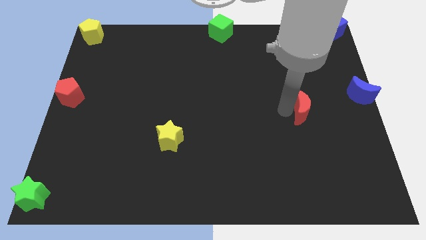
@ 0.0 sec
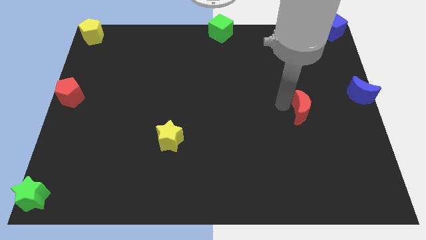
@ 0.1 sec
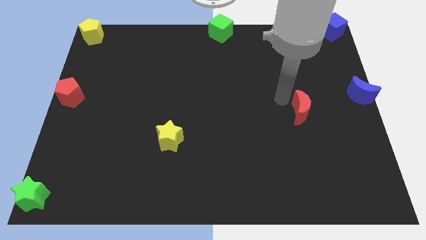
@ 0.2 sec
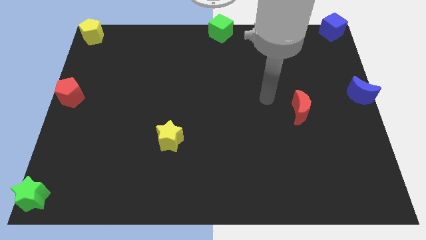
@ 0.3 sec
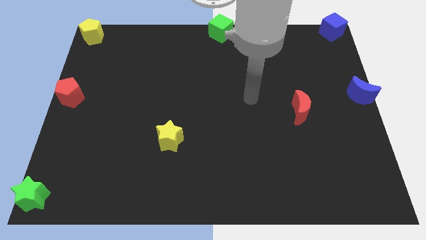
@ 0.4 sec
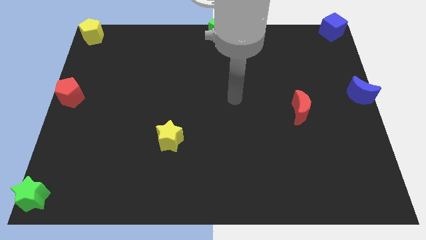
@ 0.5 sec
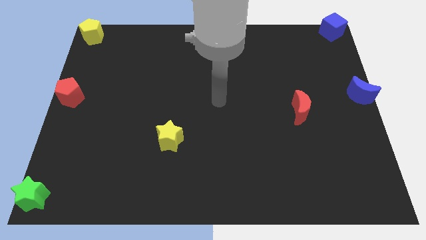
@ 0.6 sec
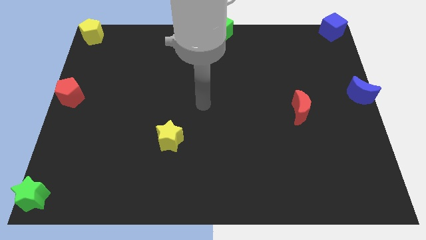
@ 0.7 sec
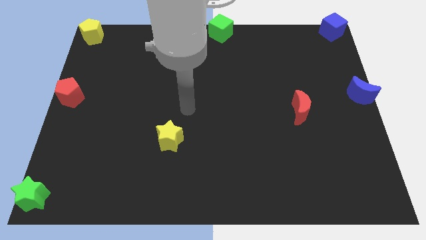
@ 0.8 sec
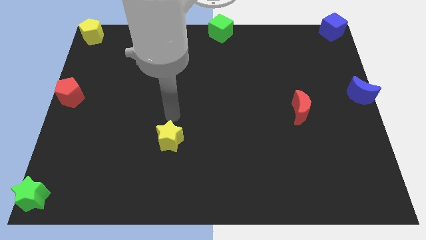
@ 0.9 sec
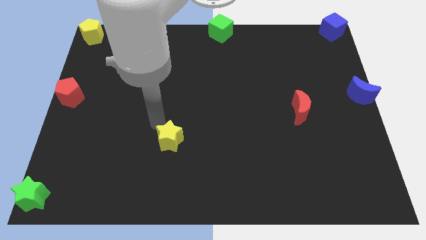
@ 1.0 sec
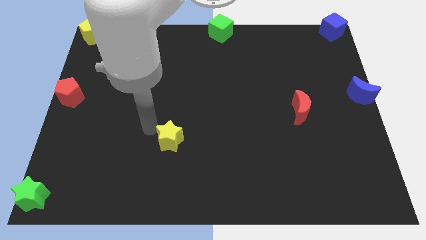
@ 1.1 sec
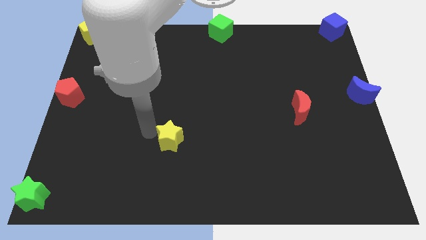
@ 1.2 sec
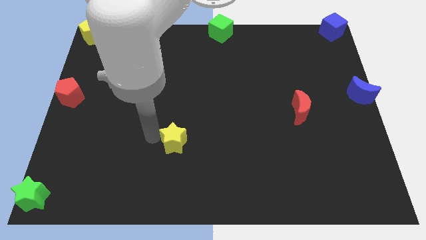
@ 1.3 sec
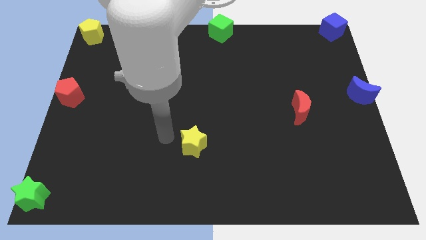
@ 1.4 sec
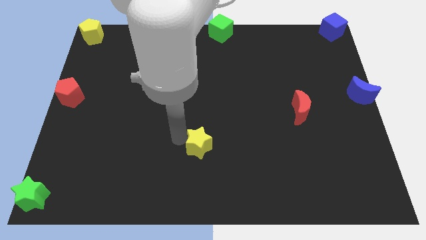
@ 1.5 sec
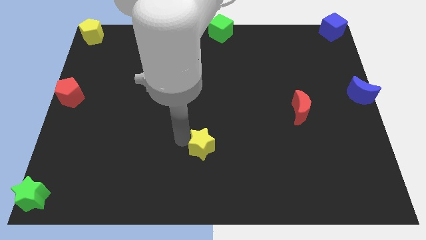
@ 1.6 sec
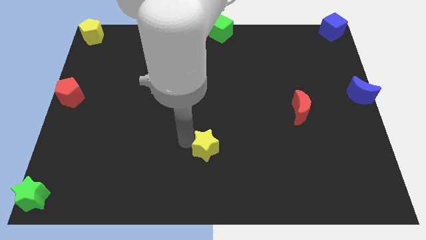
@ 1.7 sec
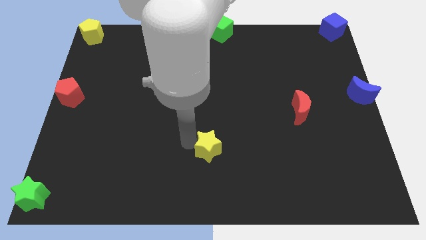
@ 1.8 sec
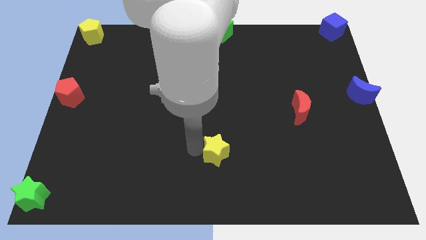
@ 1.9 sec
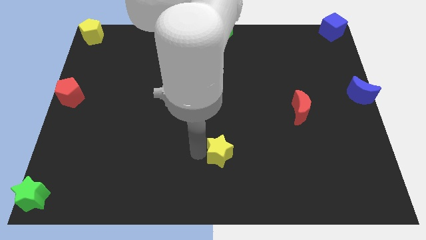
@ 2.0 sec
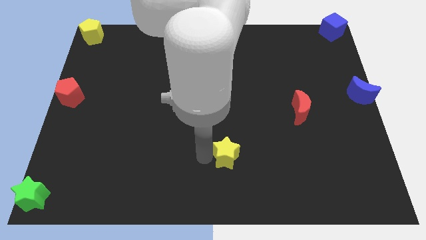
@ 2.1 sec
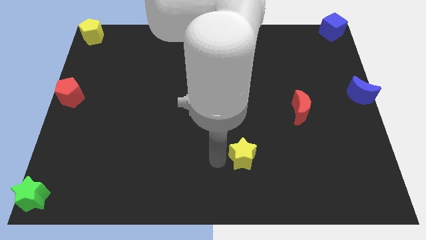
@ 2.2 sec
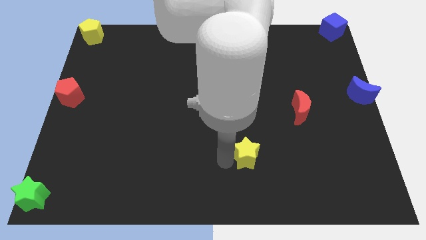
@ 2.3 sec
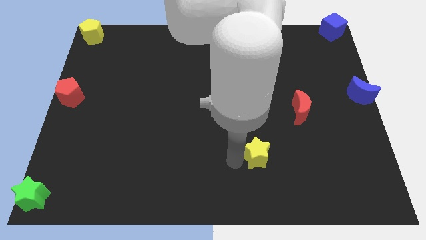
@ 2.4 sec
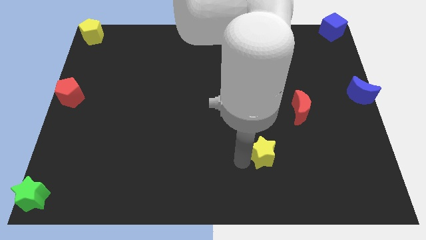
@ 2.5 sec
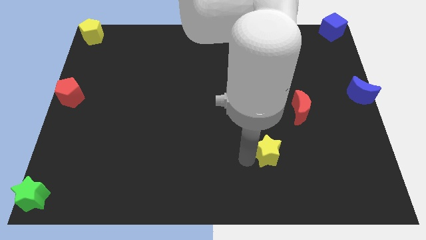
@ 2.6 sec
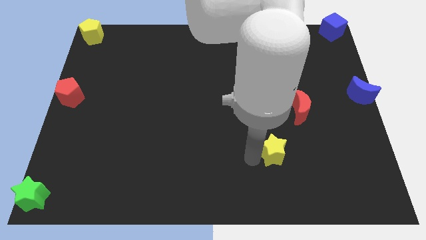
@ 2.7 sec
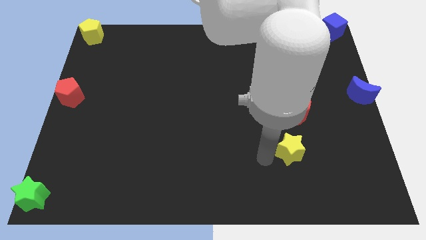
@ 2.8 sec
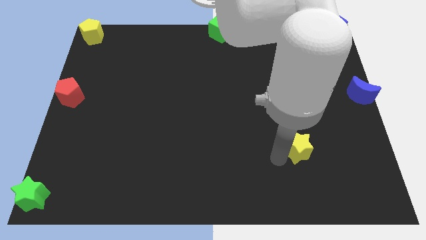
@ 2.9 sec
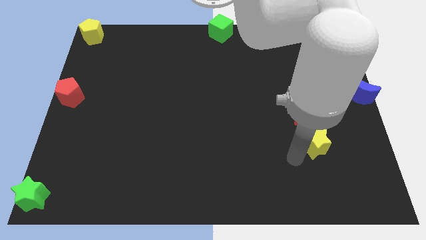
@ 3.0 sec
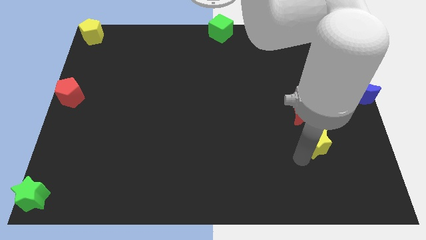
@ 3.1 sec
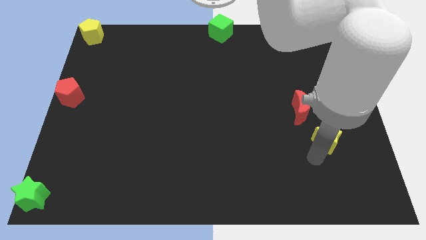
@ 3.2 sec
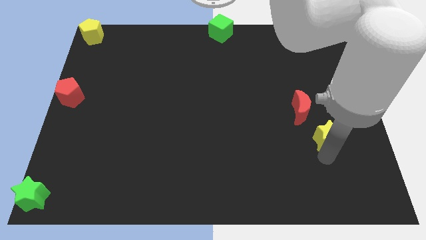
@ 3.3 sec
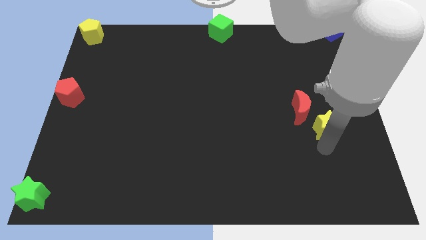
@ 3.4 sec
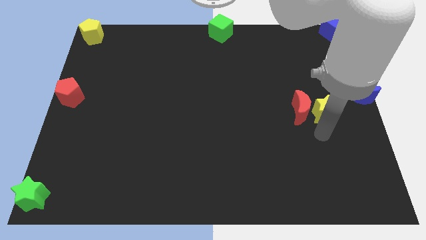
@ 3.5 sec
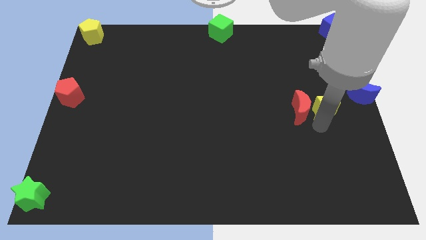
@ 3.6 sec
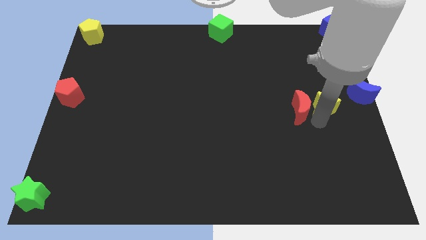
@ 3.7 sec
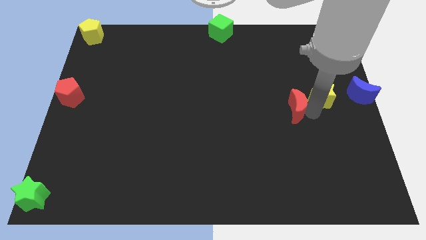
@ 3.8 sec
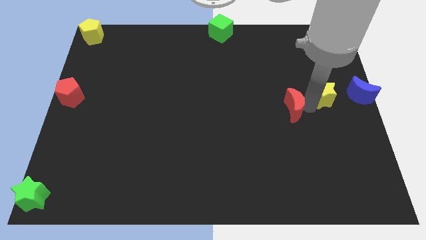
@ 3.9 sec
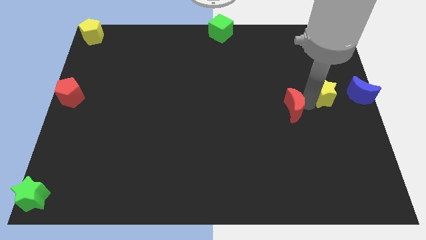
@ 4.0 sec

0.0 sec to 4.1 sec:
move the yellow star in between the red crescent and blue moon

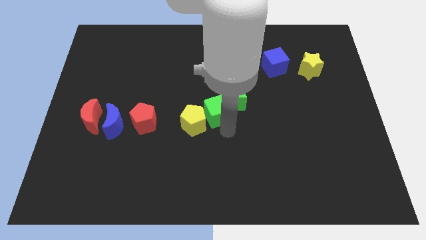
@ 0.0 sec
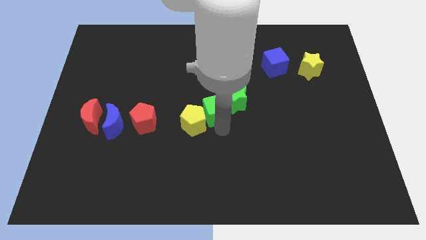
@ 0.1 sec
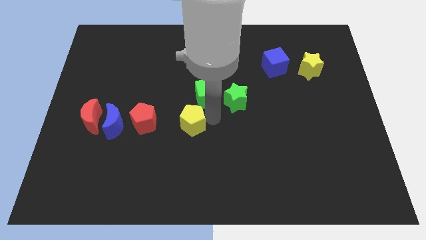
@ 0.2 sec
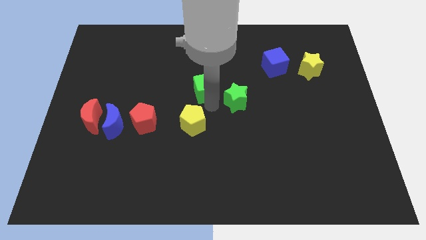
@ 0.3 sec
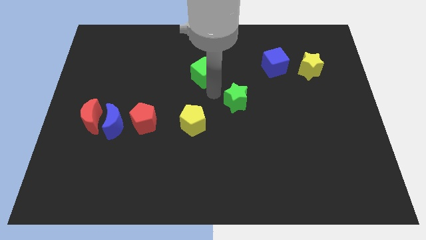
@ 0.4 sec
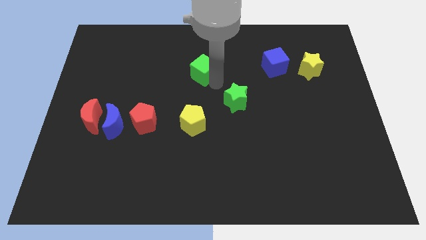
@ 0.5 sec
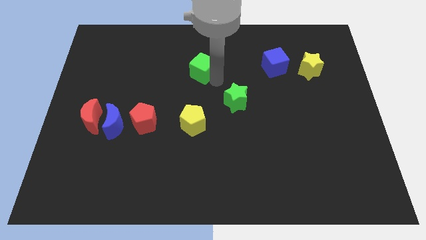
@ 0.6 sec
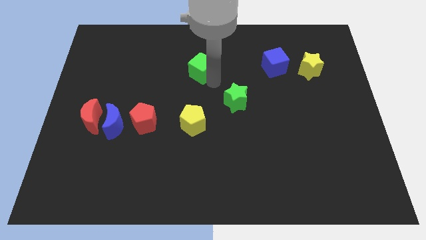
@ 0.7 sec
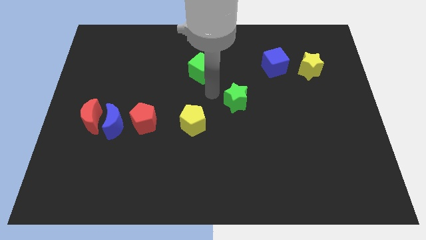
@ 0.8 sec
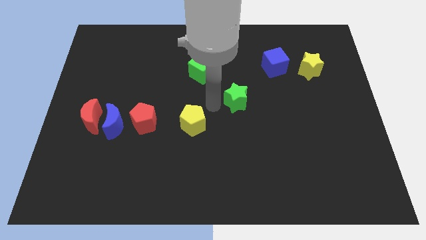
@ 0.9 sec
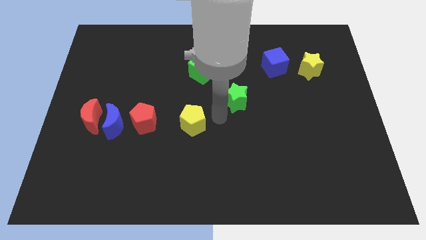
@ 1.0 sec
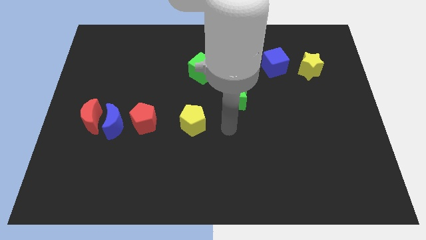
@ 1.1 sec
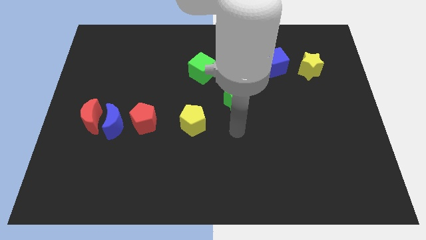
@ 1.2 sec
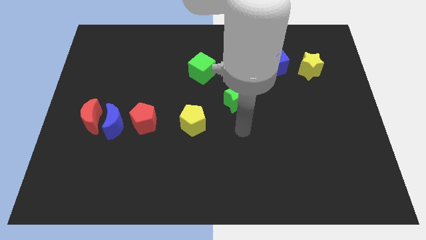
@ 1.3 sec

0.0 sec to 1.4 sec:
separate green cube from the yellow pentagon and green star

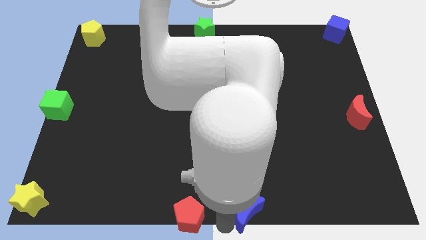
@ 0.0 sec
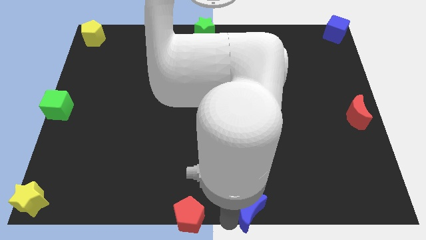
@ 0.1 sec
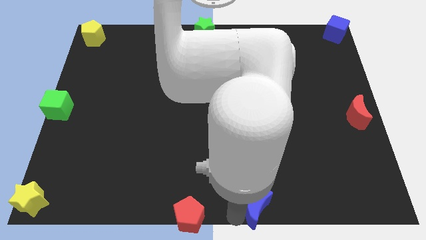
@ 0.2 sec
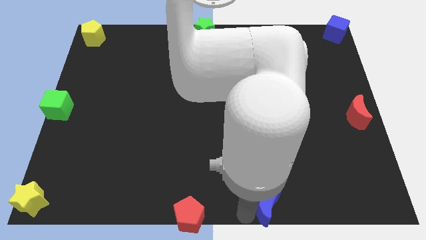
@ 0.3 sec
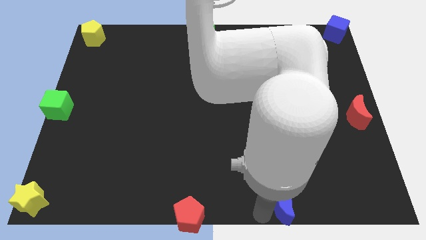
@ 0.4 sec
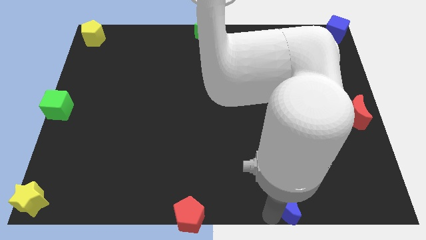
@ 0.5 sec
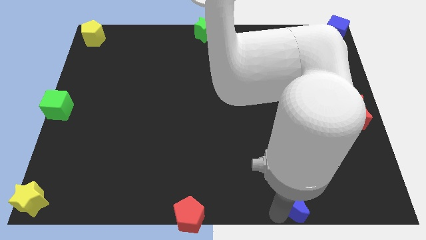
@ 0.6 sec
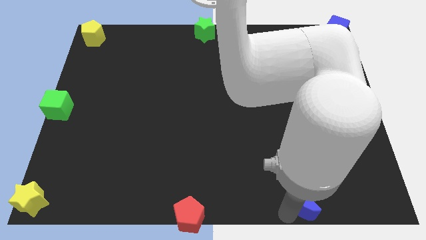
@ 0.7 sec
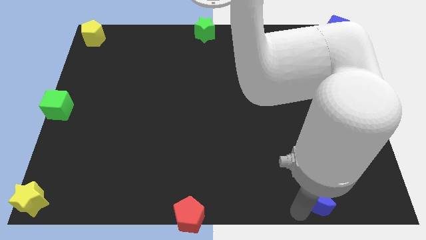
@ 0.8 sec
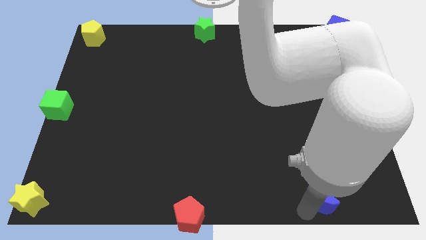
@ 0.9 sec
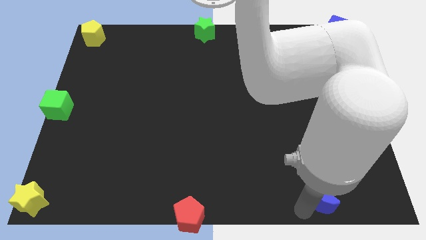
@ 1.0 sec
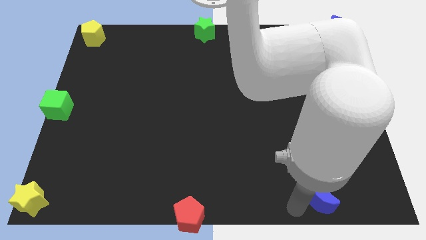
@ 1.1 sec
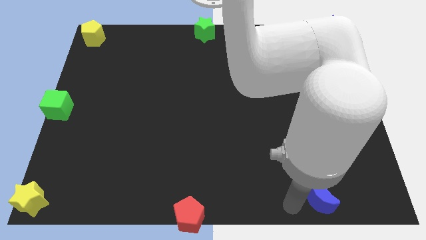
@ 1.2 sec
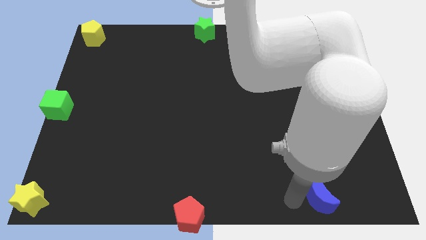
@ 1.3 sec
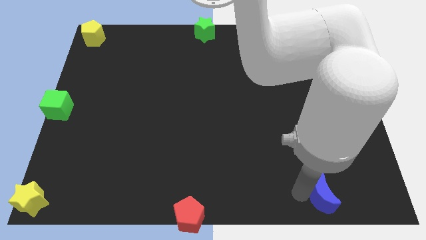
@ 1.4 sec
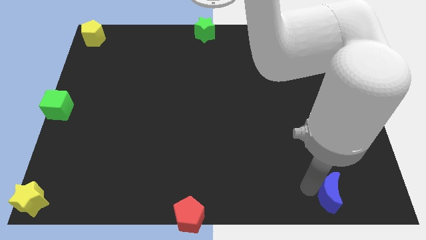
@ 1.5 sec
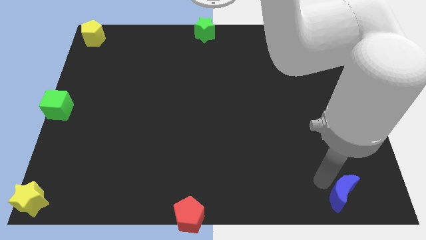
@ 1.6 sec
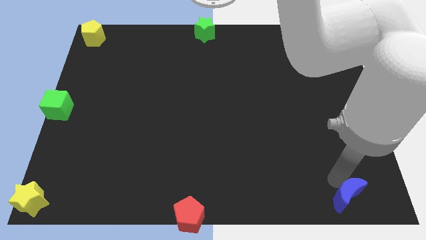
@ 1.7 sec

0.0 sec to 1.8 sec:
push the blue moon towards the bottom right corner of the board

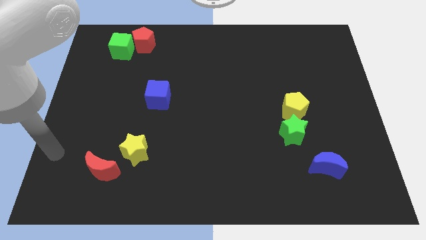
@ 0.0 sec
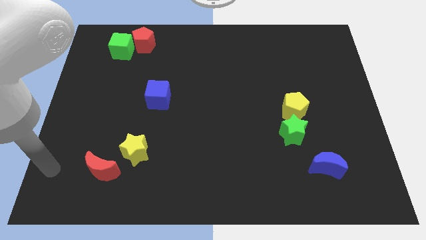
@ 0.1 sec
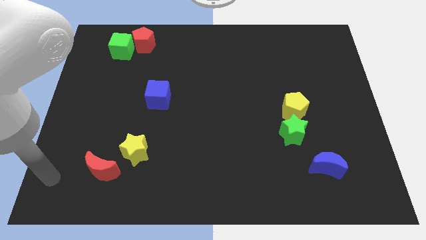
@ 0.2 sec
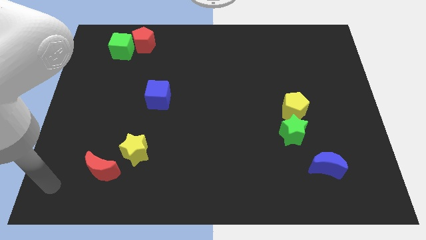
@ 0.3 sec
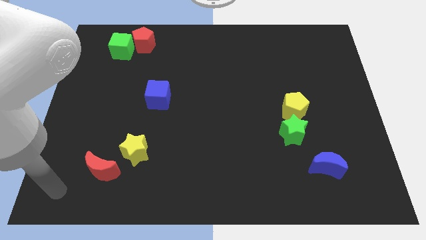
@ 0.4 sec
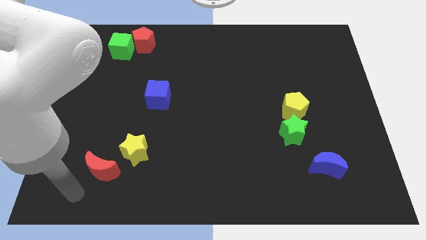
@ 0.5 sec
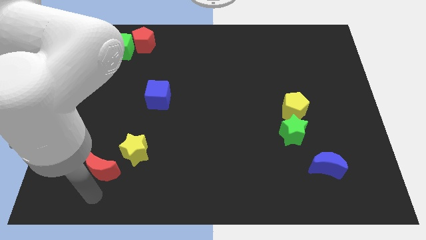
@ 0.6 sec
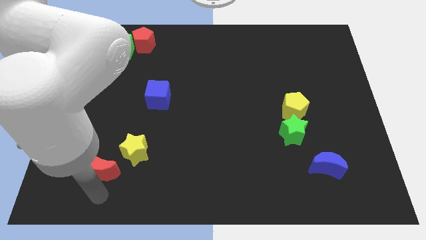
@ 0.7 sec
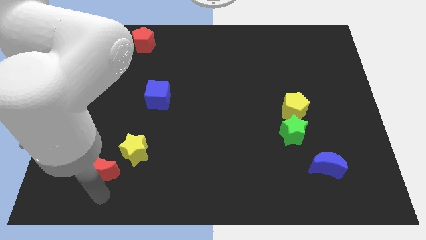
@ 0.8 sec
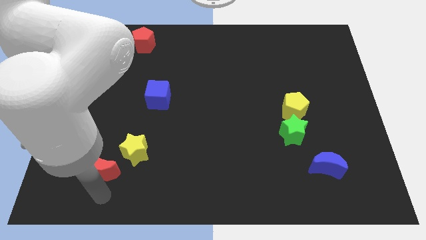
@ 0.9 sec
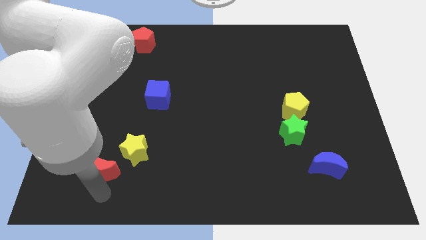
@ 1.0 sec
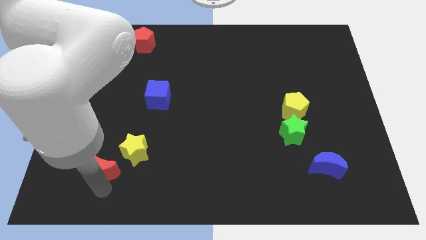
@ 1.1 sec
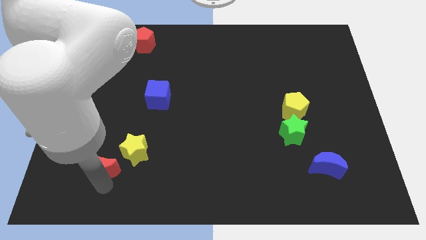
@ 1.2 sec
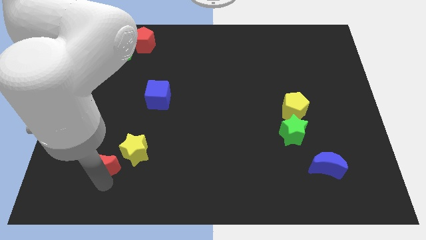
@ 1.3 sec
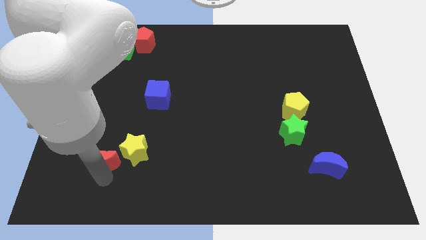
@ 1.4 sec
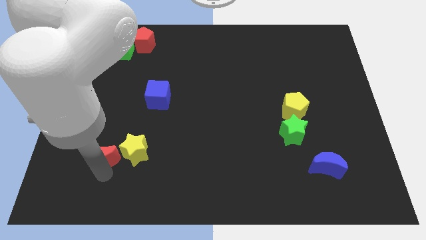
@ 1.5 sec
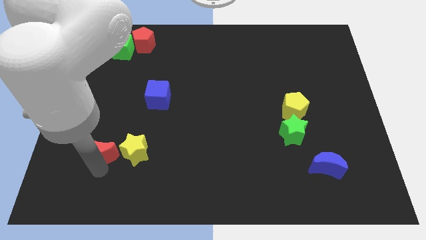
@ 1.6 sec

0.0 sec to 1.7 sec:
move the red crescent to the left of the yellow star
